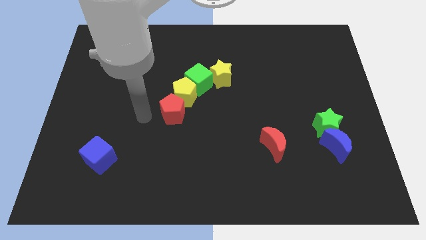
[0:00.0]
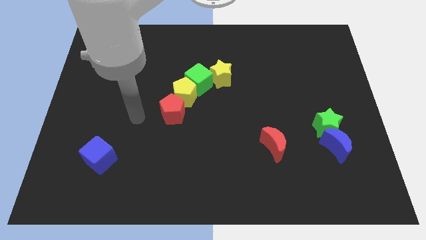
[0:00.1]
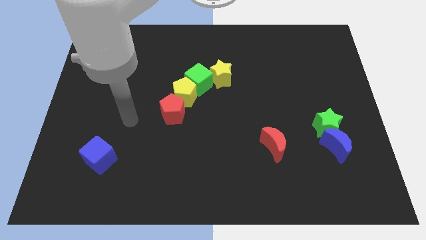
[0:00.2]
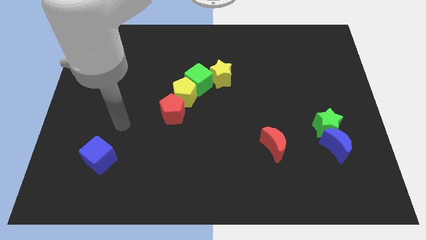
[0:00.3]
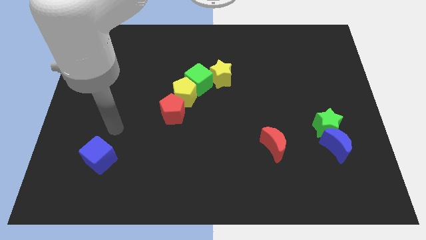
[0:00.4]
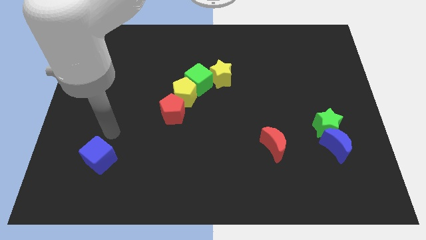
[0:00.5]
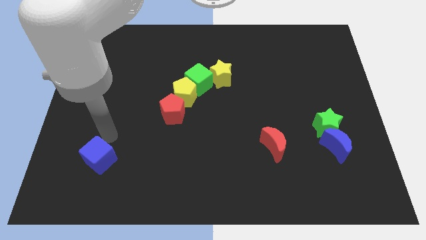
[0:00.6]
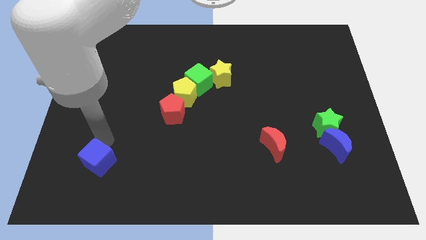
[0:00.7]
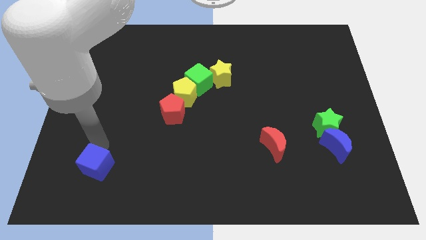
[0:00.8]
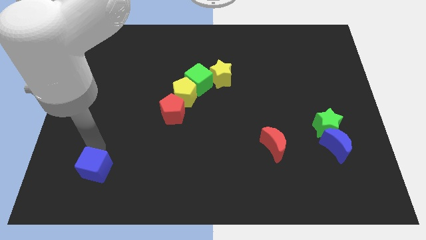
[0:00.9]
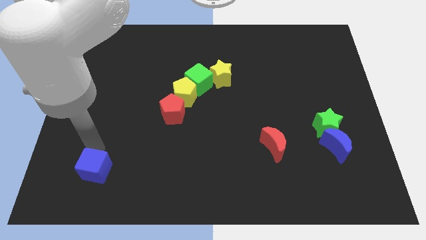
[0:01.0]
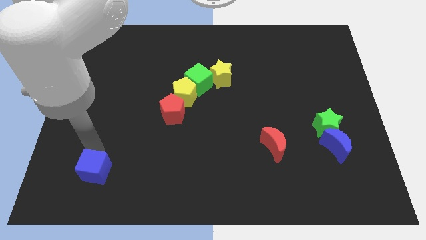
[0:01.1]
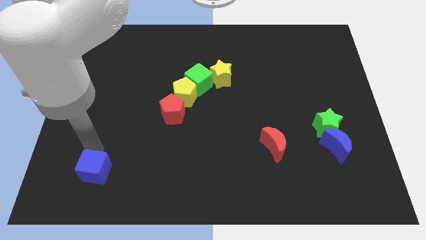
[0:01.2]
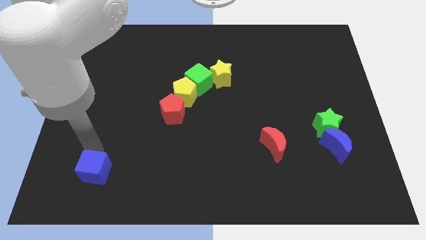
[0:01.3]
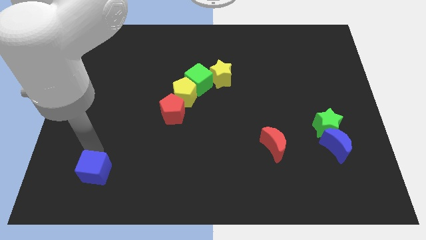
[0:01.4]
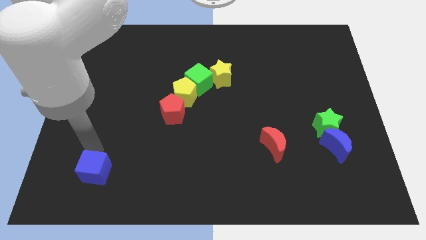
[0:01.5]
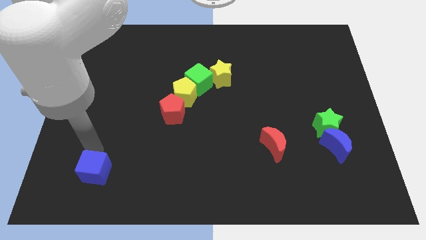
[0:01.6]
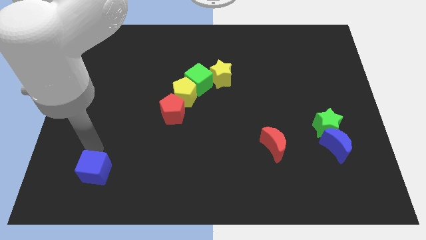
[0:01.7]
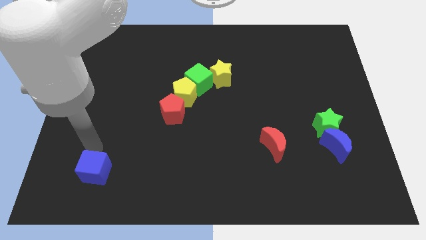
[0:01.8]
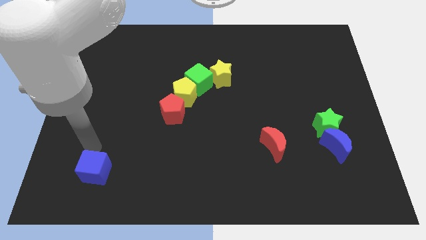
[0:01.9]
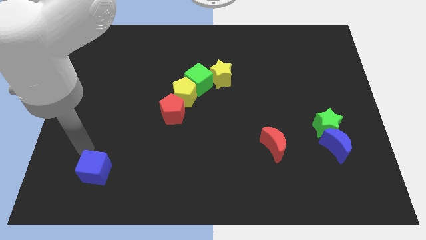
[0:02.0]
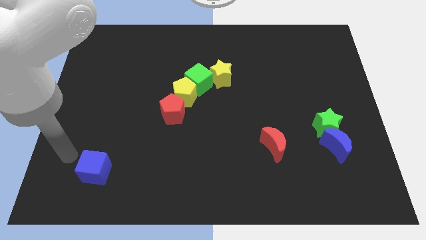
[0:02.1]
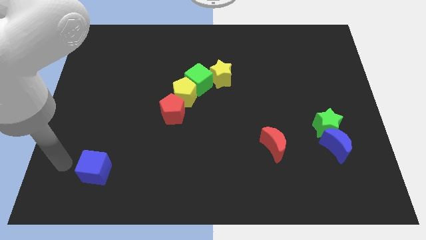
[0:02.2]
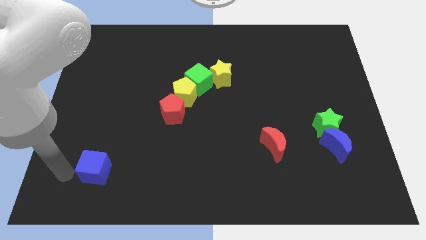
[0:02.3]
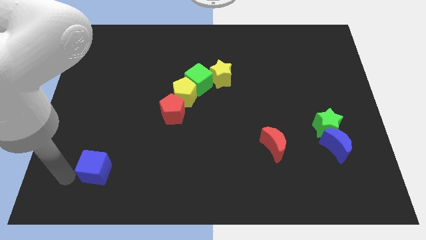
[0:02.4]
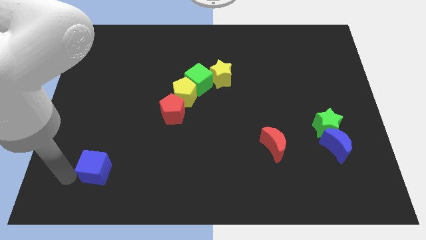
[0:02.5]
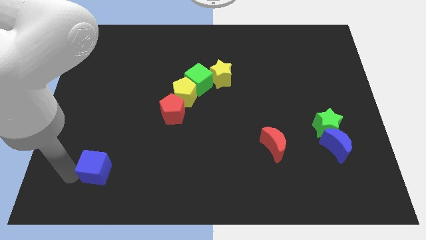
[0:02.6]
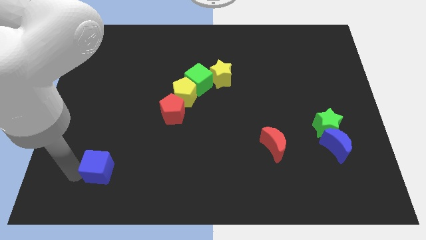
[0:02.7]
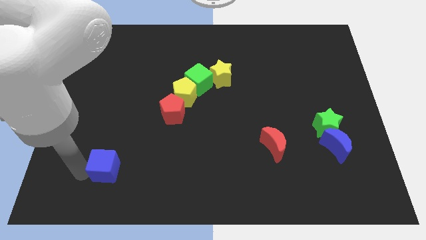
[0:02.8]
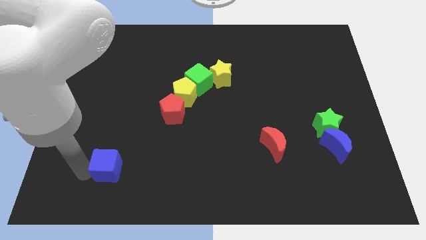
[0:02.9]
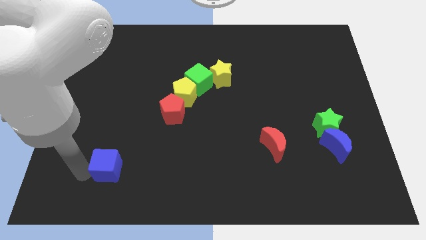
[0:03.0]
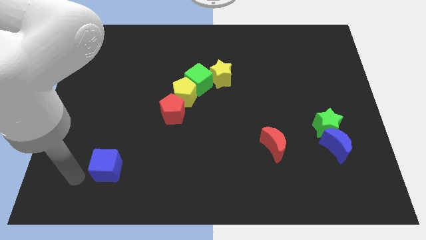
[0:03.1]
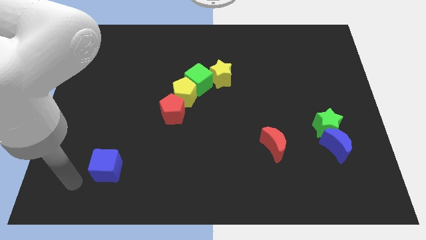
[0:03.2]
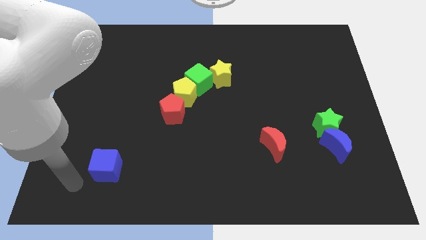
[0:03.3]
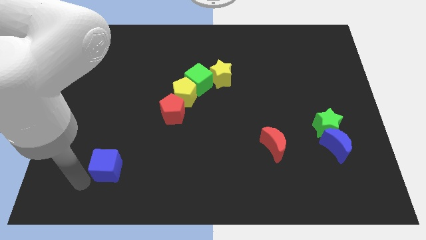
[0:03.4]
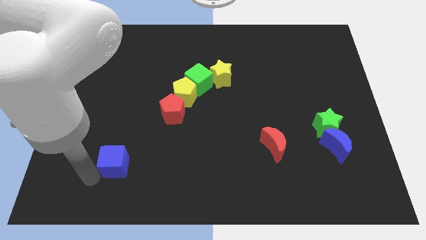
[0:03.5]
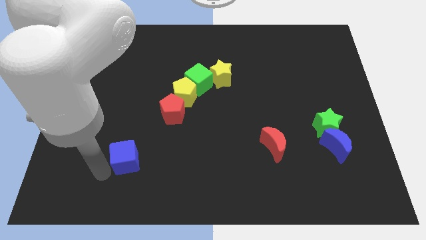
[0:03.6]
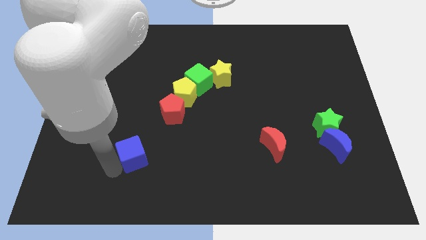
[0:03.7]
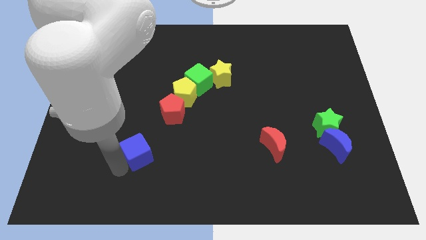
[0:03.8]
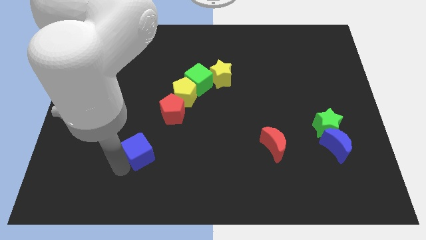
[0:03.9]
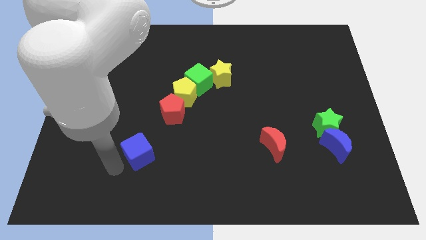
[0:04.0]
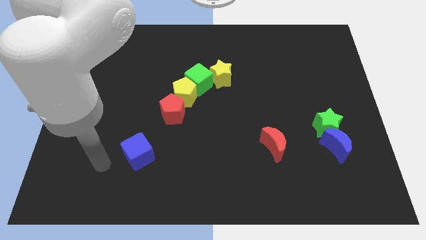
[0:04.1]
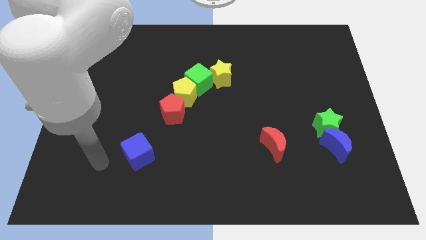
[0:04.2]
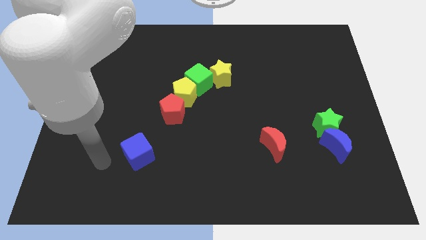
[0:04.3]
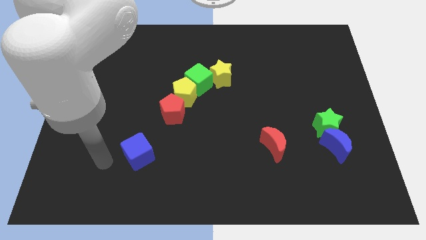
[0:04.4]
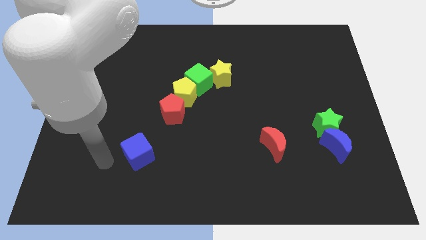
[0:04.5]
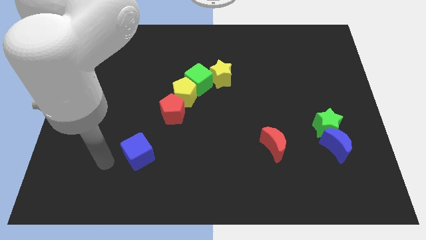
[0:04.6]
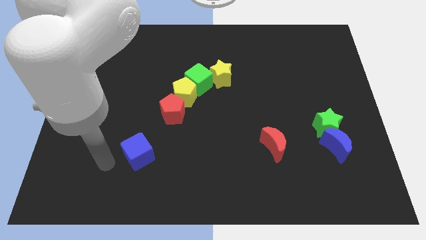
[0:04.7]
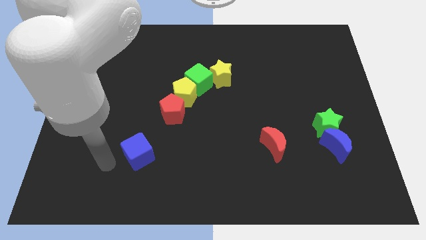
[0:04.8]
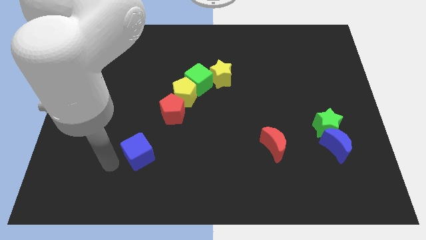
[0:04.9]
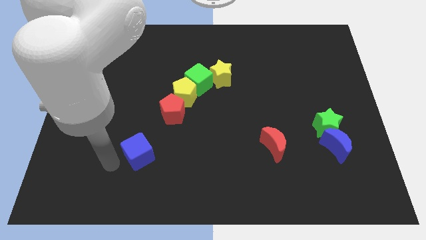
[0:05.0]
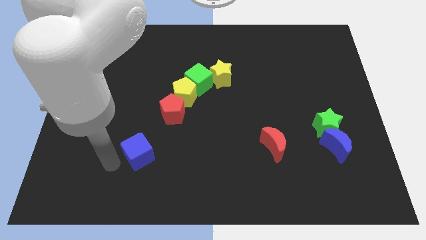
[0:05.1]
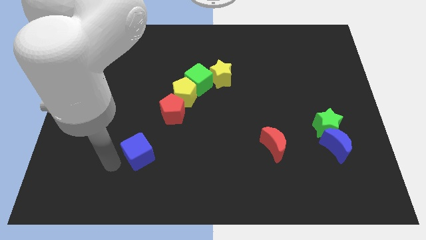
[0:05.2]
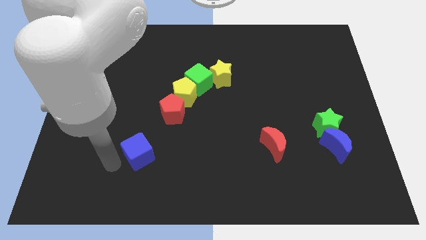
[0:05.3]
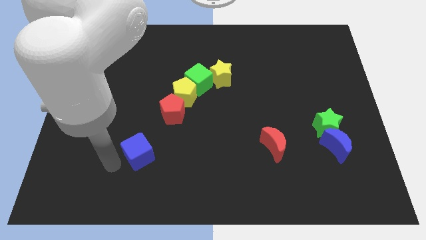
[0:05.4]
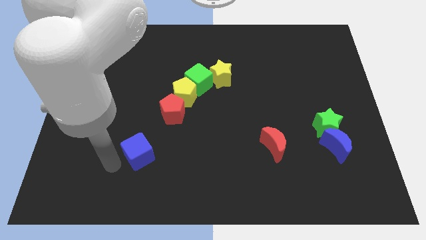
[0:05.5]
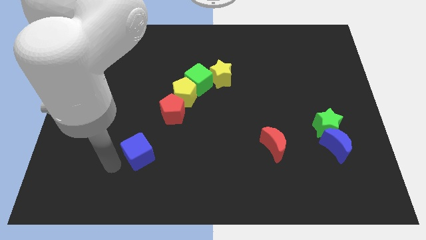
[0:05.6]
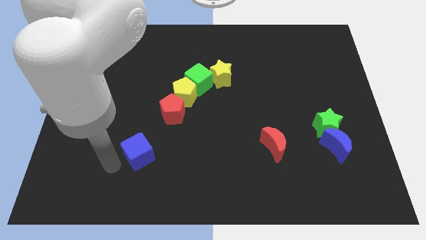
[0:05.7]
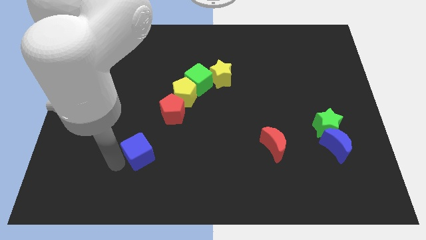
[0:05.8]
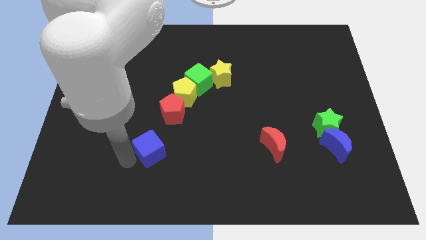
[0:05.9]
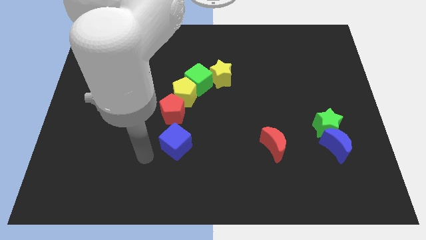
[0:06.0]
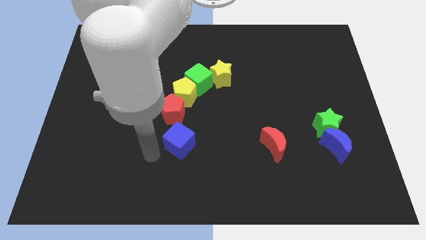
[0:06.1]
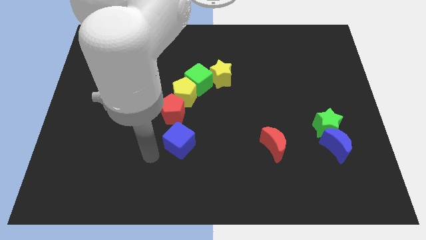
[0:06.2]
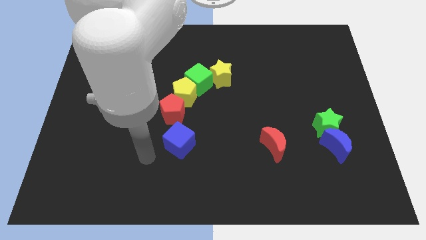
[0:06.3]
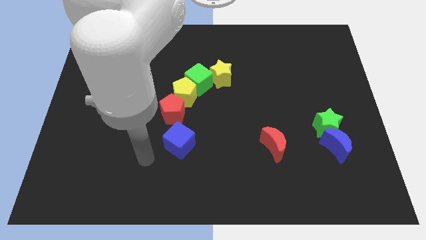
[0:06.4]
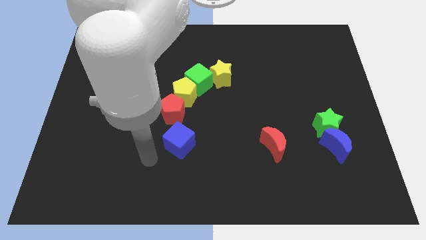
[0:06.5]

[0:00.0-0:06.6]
place the blue cube close to the red pentagon

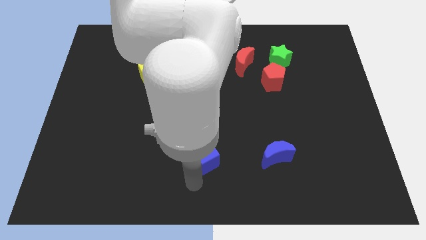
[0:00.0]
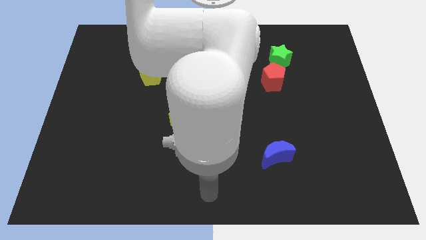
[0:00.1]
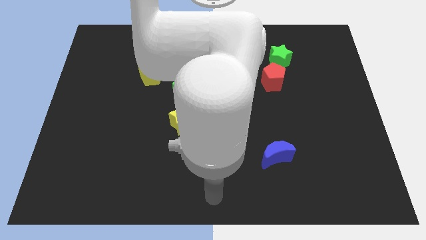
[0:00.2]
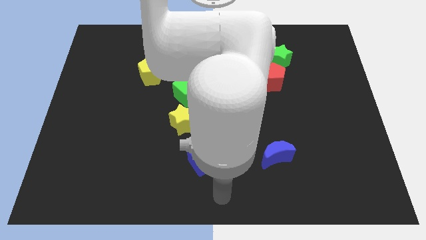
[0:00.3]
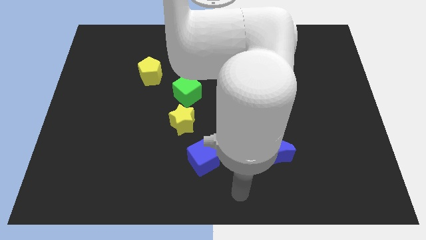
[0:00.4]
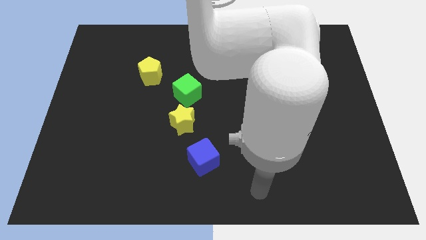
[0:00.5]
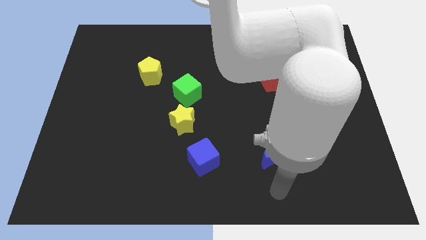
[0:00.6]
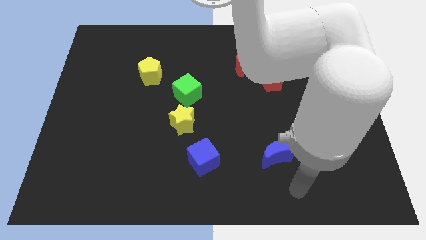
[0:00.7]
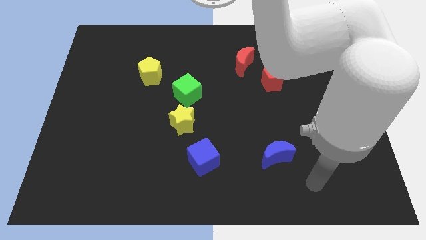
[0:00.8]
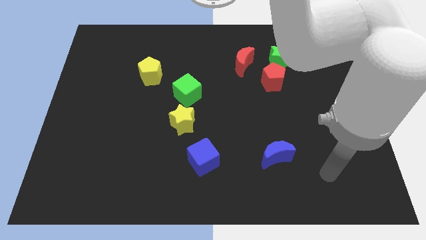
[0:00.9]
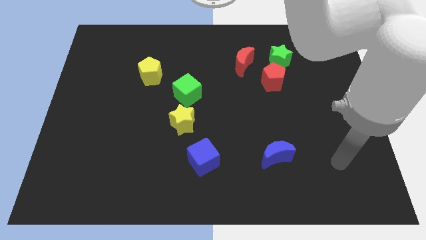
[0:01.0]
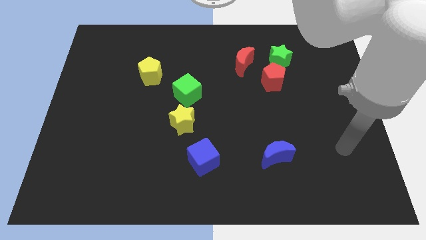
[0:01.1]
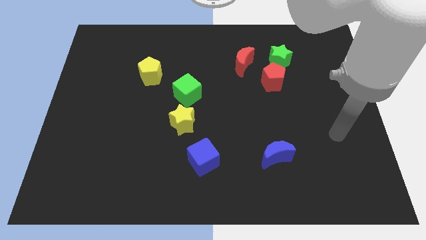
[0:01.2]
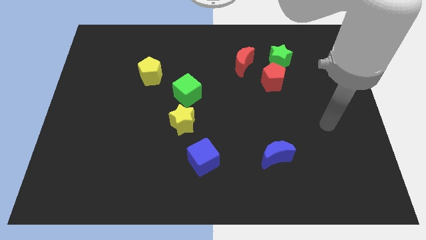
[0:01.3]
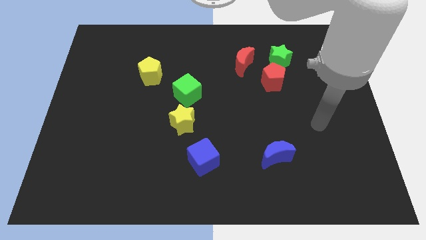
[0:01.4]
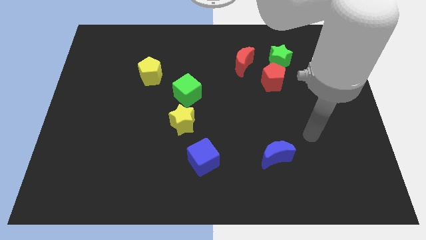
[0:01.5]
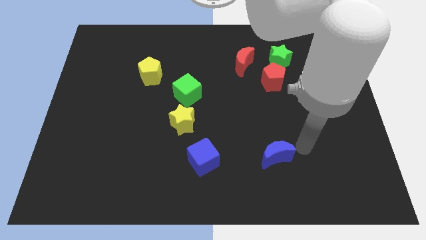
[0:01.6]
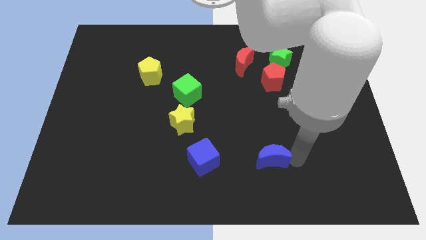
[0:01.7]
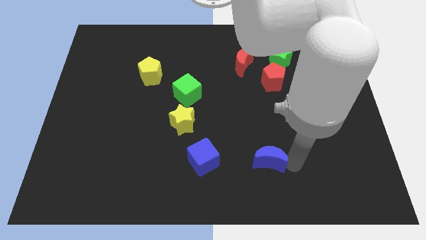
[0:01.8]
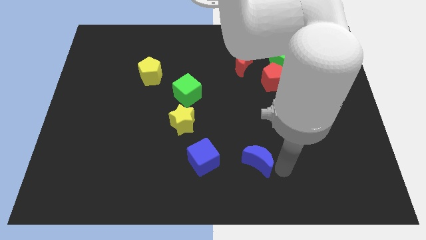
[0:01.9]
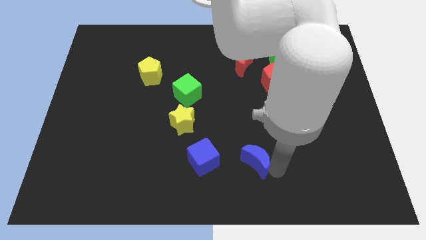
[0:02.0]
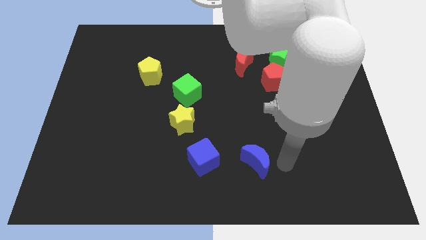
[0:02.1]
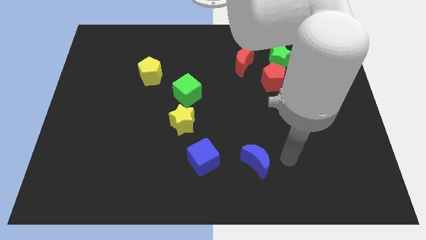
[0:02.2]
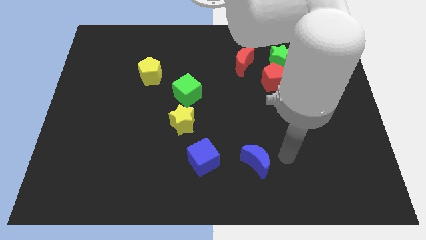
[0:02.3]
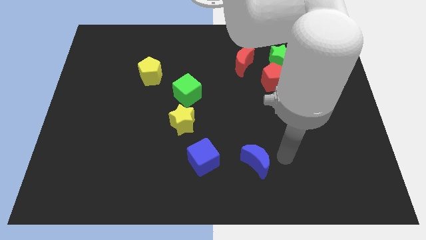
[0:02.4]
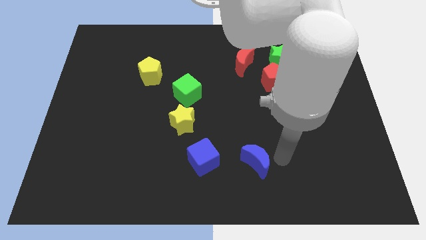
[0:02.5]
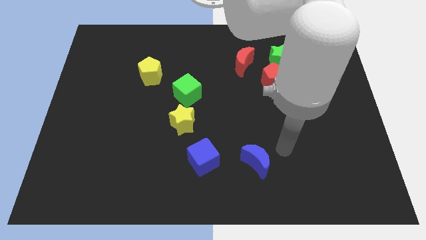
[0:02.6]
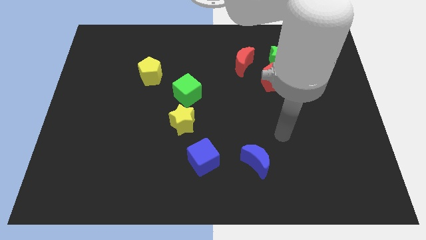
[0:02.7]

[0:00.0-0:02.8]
push the blue crescent into the blue cube
